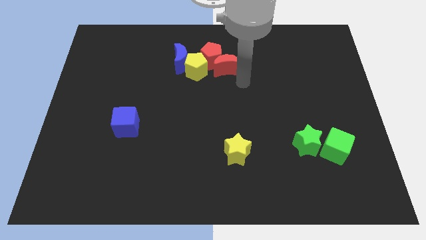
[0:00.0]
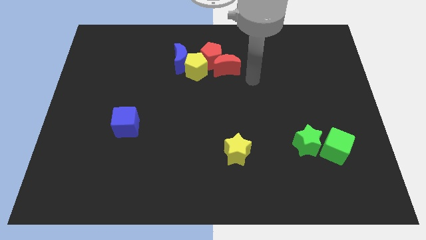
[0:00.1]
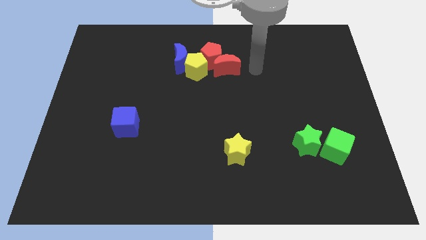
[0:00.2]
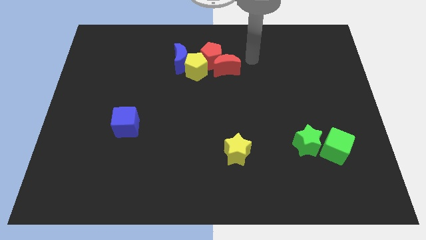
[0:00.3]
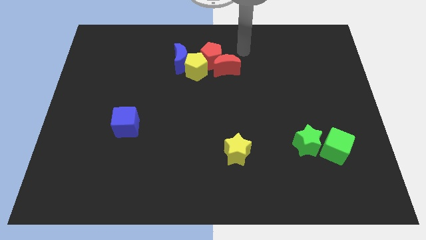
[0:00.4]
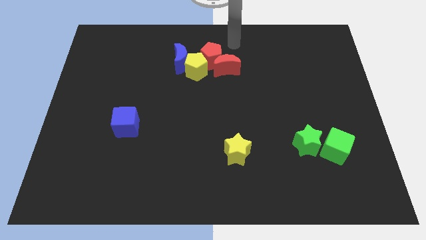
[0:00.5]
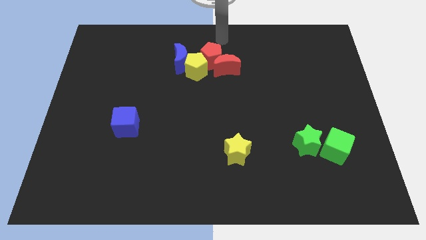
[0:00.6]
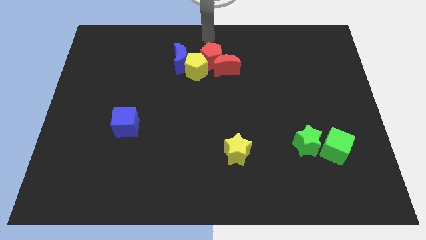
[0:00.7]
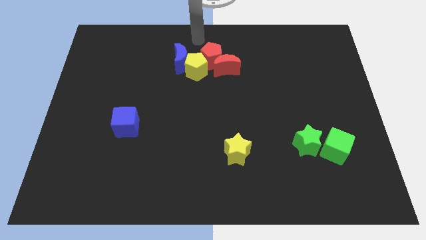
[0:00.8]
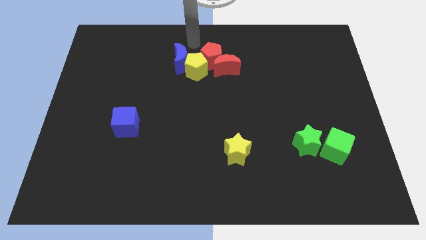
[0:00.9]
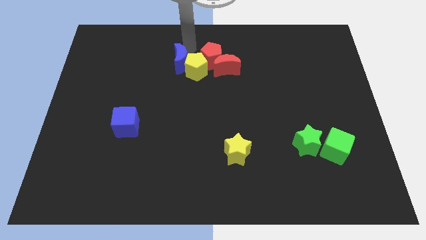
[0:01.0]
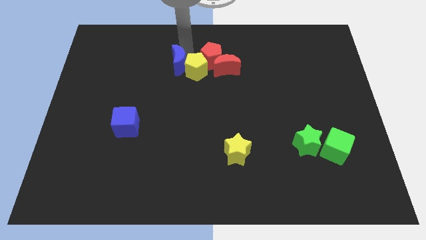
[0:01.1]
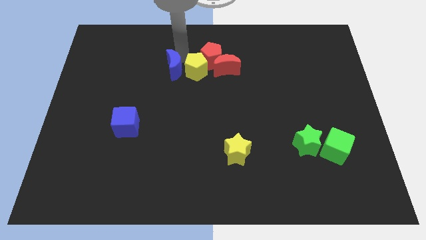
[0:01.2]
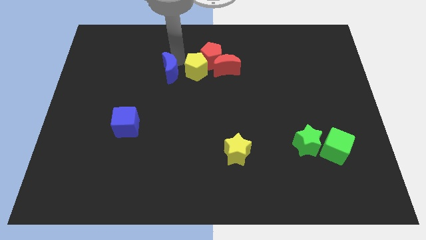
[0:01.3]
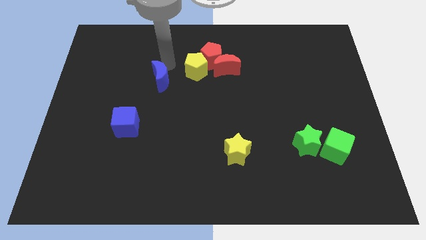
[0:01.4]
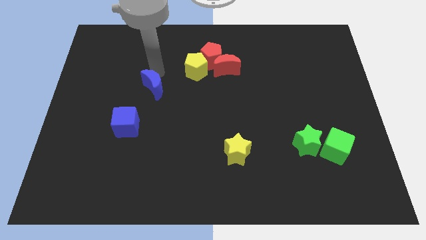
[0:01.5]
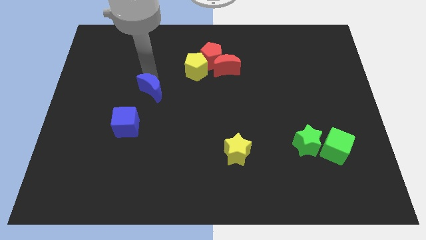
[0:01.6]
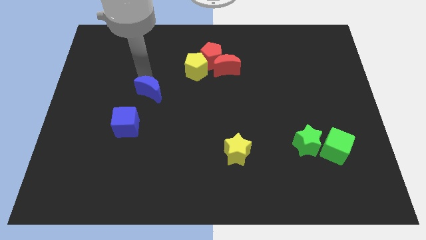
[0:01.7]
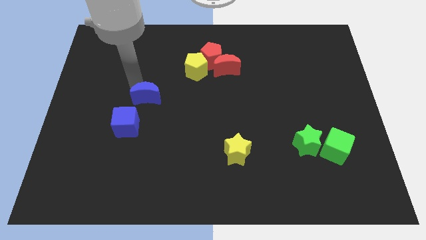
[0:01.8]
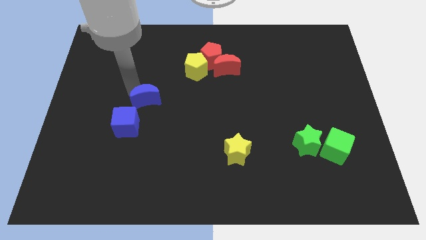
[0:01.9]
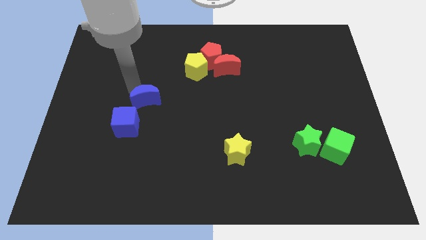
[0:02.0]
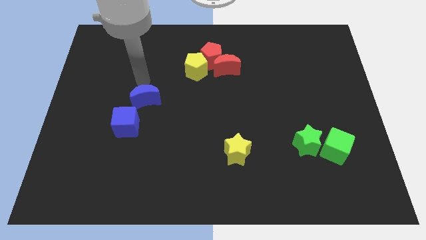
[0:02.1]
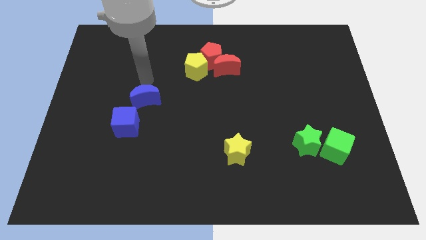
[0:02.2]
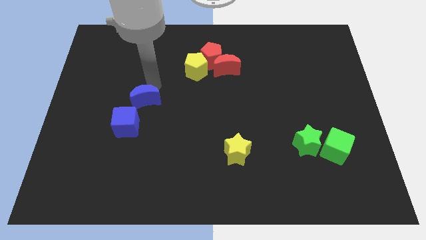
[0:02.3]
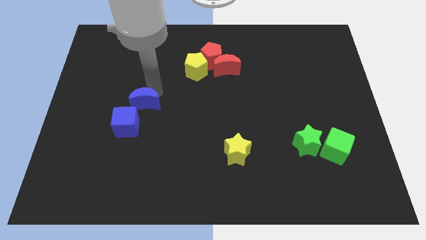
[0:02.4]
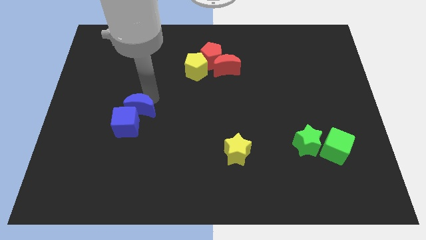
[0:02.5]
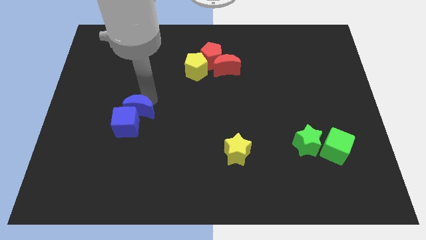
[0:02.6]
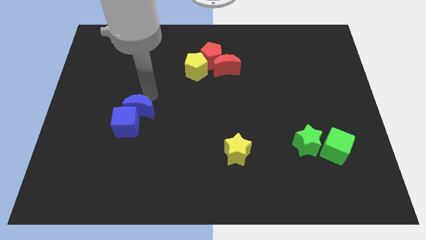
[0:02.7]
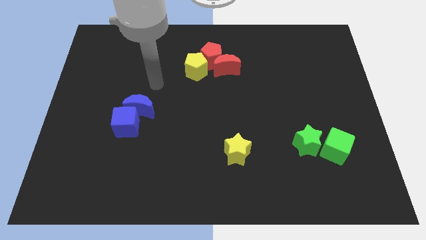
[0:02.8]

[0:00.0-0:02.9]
push the blue crescent at top right of the blue cube

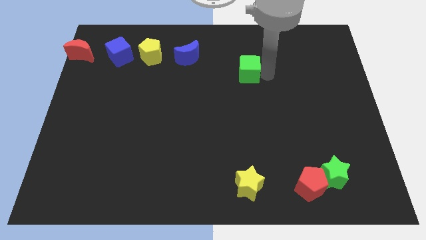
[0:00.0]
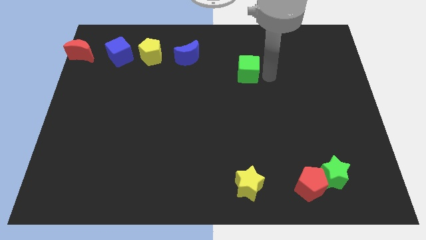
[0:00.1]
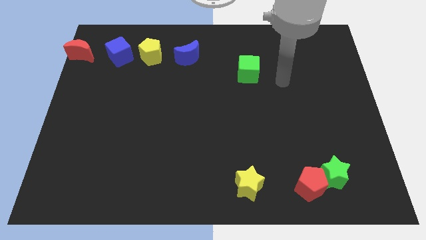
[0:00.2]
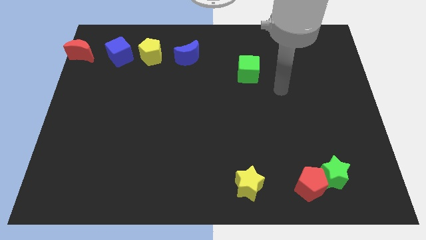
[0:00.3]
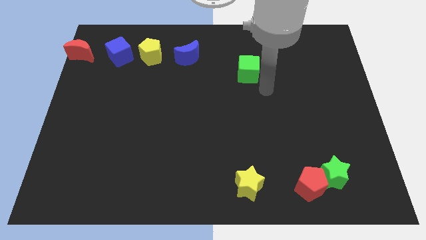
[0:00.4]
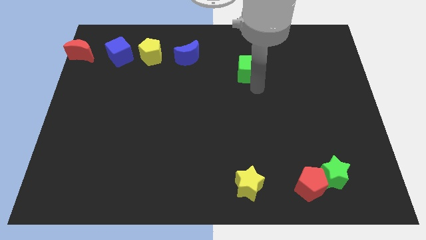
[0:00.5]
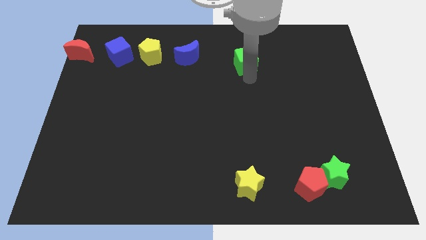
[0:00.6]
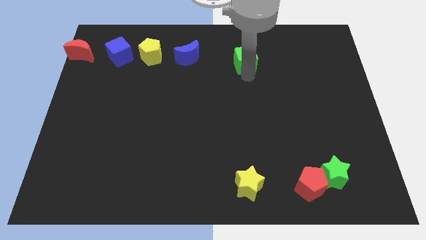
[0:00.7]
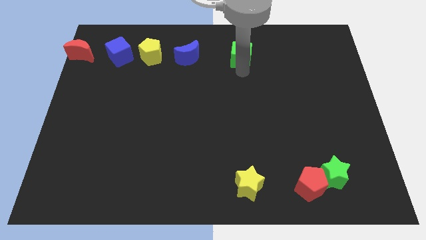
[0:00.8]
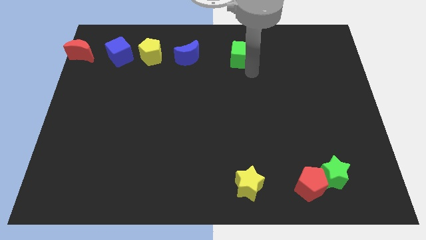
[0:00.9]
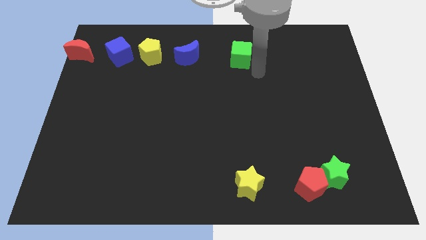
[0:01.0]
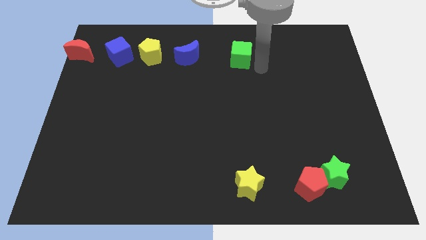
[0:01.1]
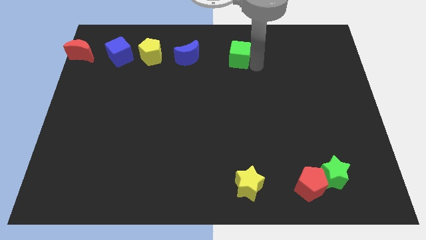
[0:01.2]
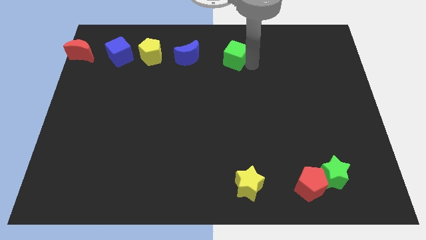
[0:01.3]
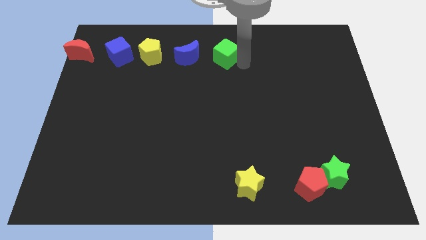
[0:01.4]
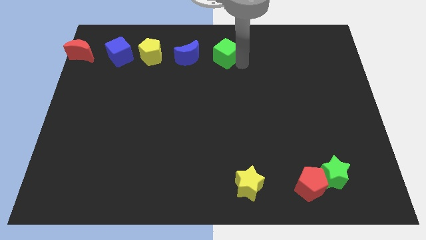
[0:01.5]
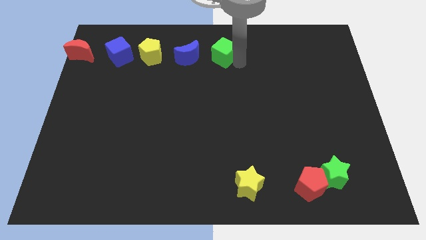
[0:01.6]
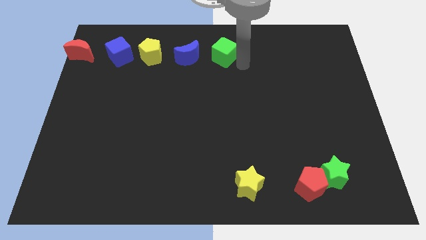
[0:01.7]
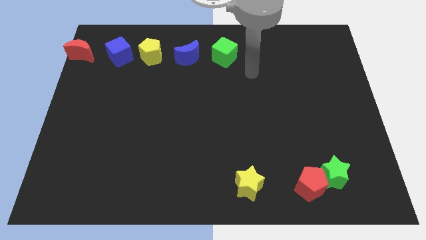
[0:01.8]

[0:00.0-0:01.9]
put the green cube on the right side of the blue crescent

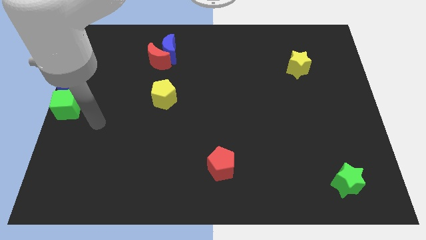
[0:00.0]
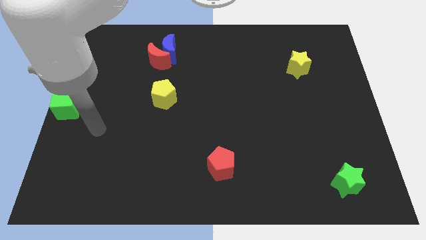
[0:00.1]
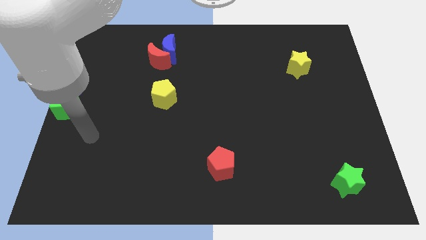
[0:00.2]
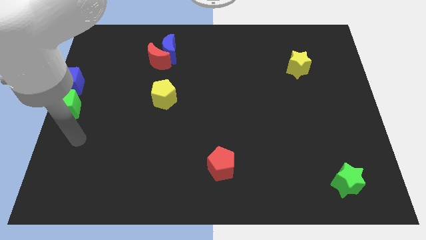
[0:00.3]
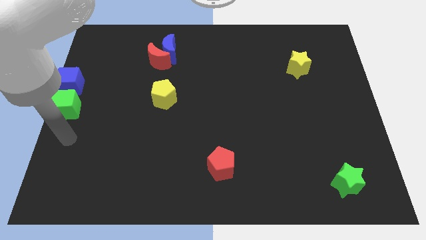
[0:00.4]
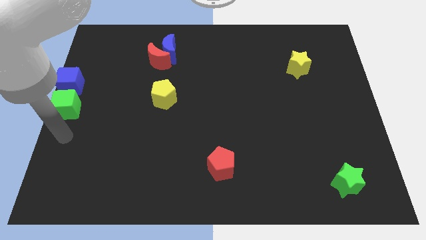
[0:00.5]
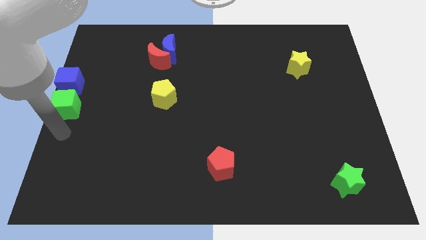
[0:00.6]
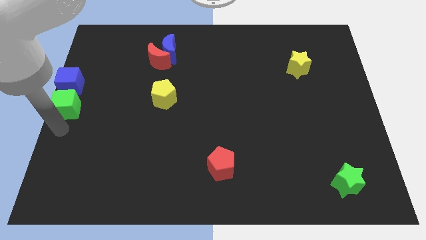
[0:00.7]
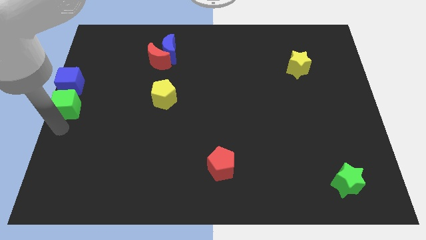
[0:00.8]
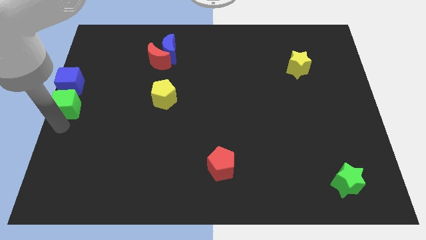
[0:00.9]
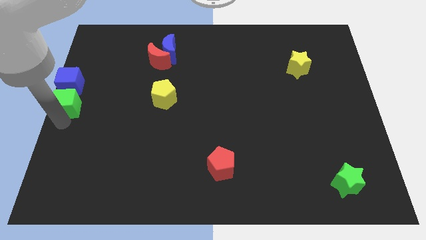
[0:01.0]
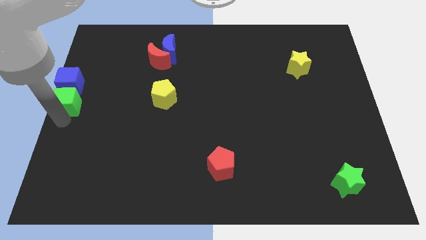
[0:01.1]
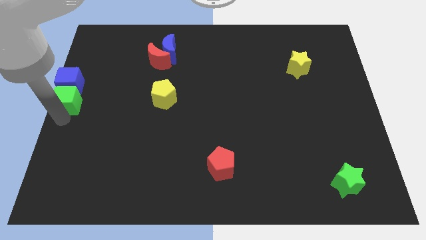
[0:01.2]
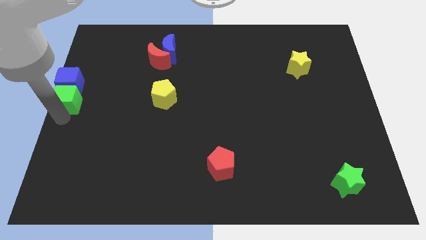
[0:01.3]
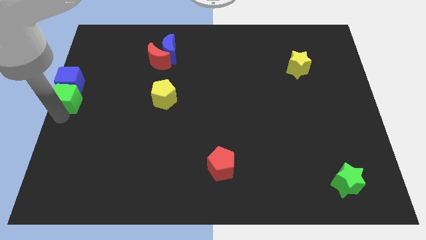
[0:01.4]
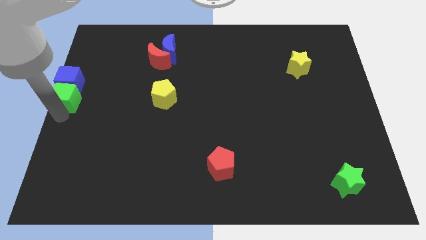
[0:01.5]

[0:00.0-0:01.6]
push green cube into blue cube

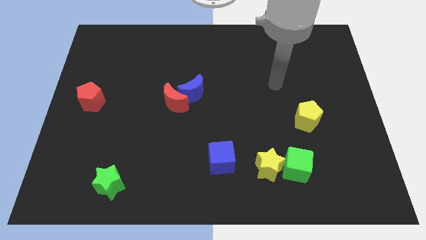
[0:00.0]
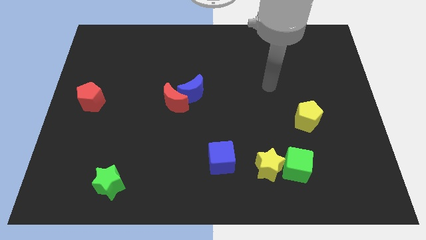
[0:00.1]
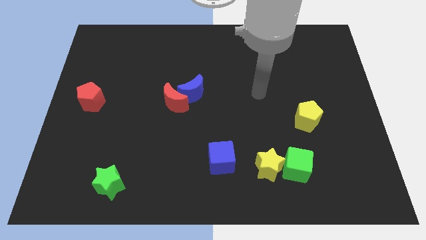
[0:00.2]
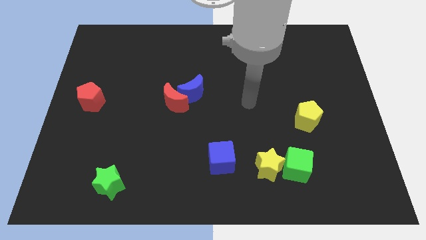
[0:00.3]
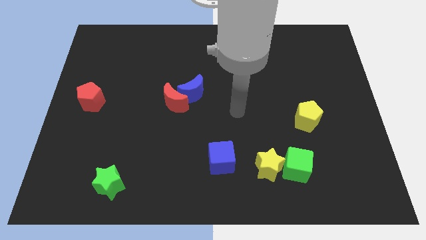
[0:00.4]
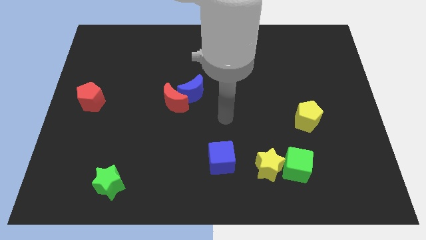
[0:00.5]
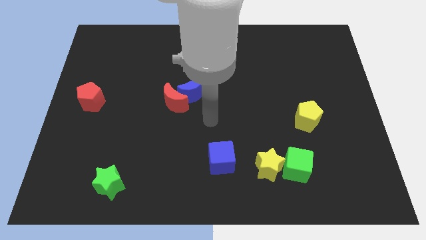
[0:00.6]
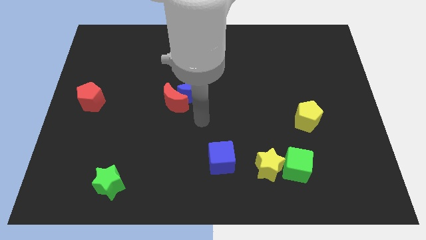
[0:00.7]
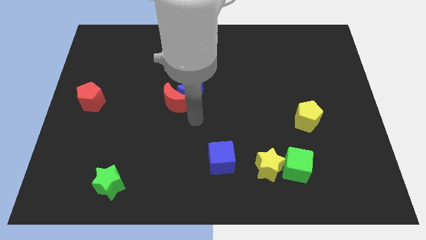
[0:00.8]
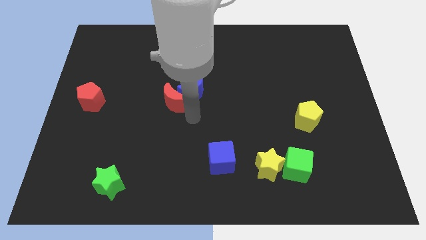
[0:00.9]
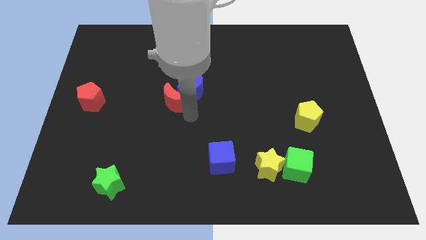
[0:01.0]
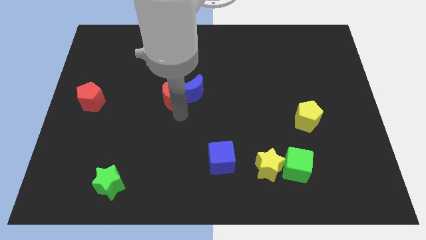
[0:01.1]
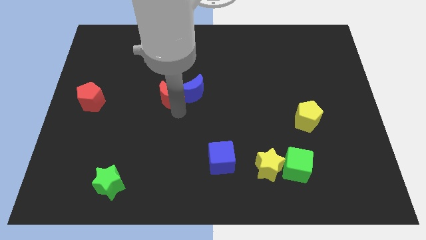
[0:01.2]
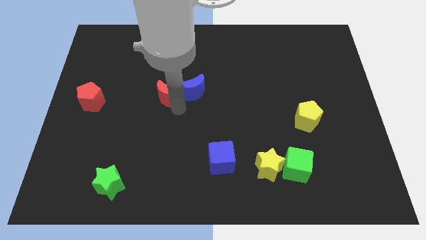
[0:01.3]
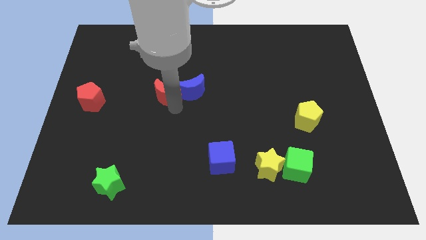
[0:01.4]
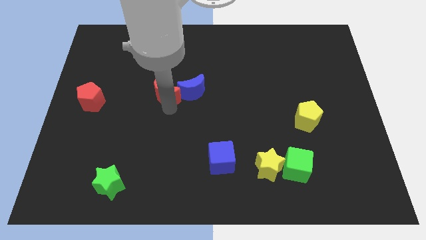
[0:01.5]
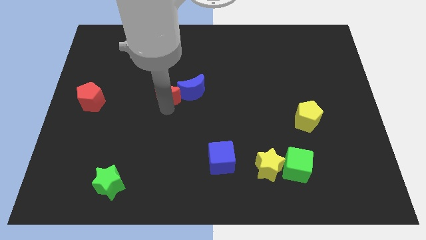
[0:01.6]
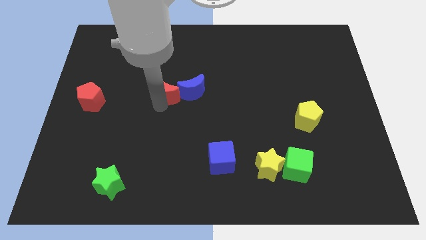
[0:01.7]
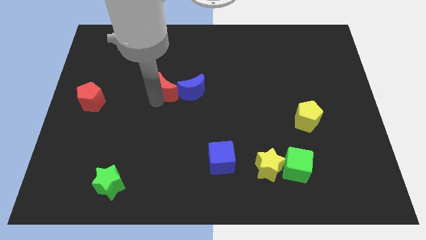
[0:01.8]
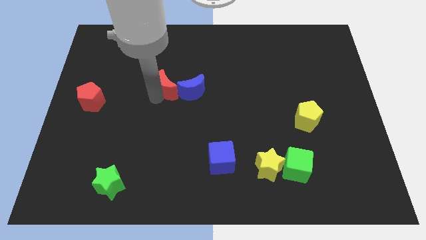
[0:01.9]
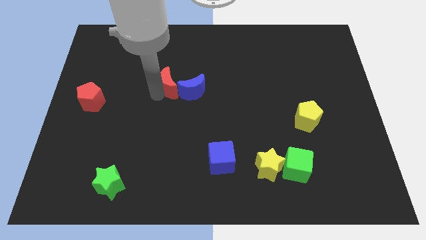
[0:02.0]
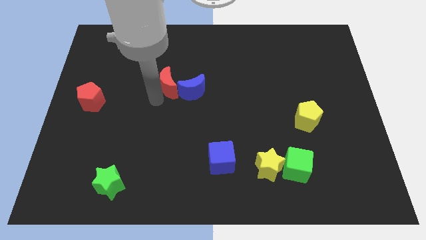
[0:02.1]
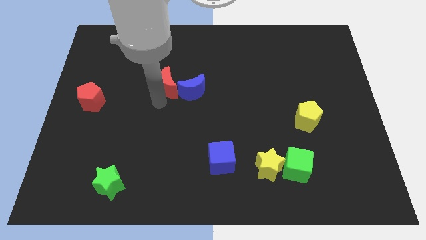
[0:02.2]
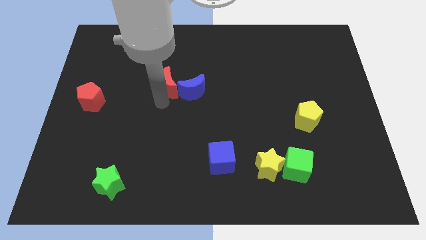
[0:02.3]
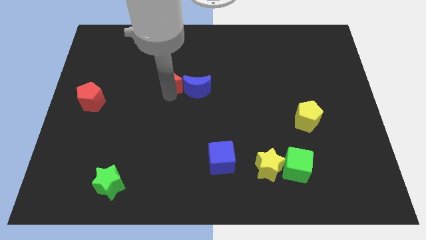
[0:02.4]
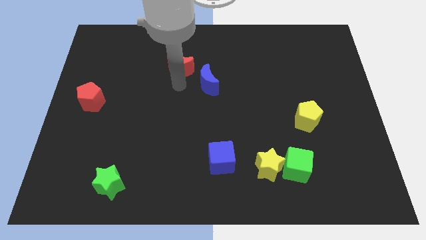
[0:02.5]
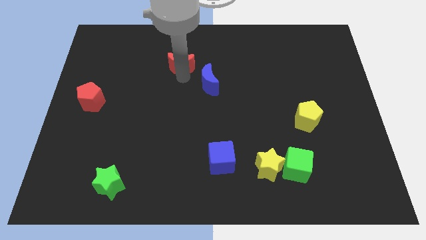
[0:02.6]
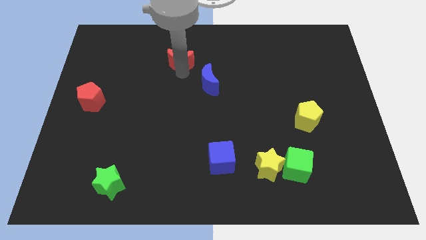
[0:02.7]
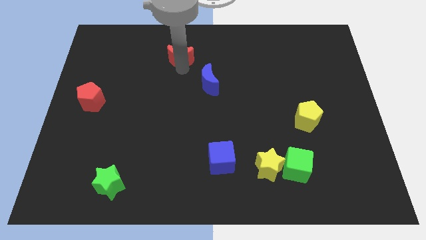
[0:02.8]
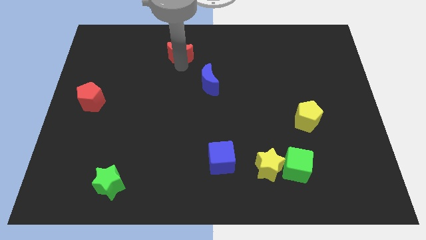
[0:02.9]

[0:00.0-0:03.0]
separate the crescents
